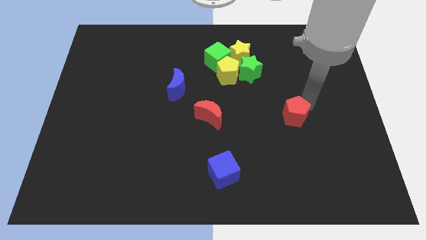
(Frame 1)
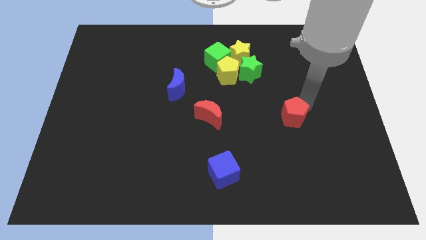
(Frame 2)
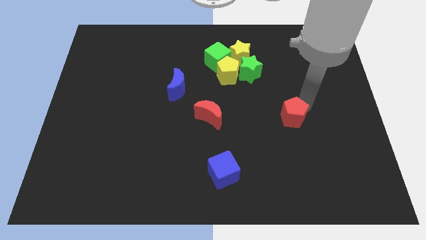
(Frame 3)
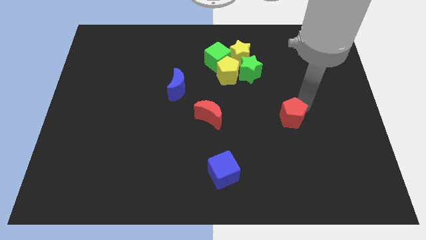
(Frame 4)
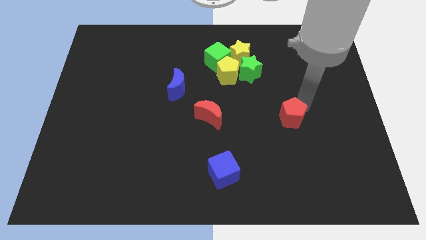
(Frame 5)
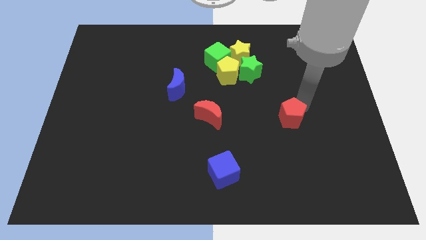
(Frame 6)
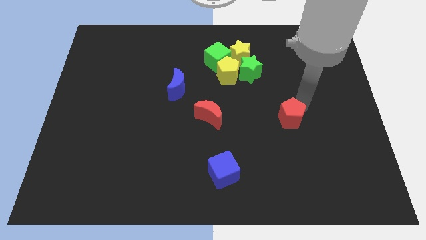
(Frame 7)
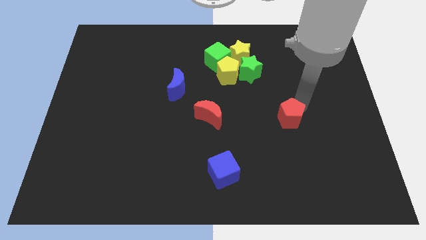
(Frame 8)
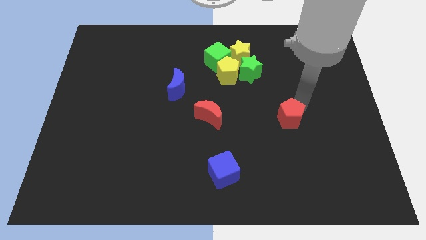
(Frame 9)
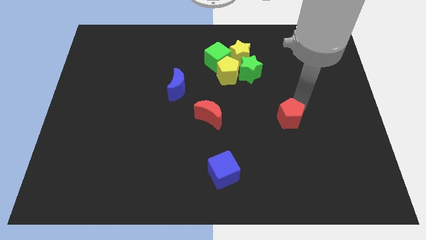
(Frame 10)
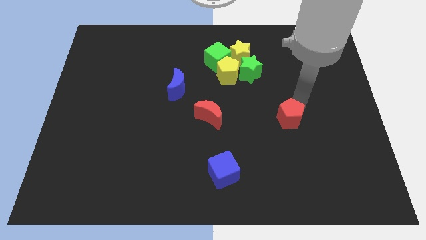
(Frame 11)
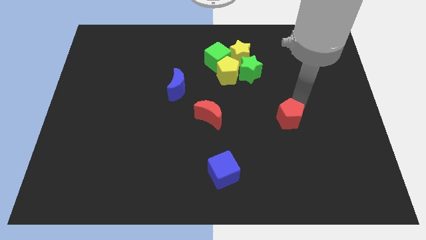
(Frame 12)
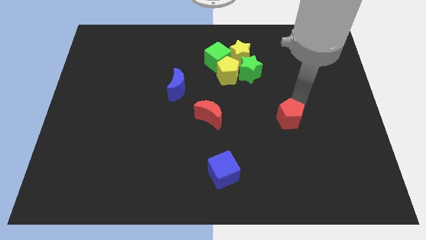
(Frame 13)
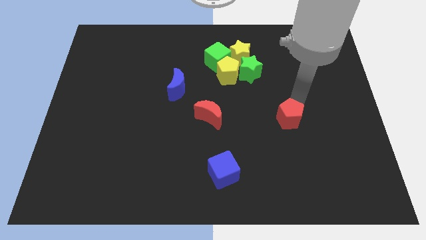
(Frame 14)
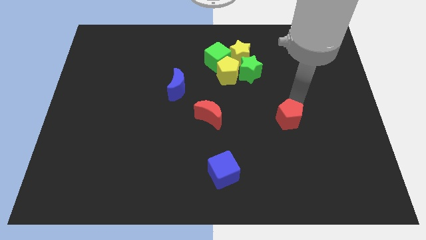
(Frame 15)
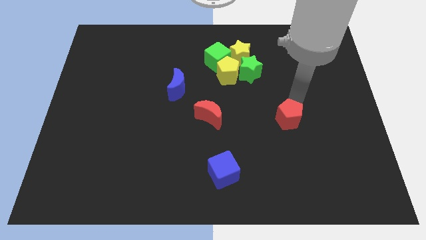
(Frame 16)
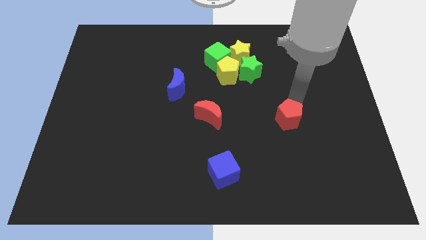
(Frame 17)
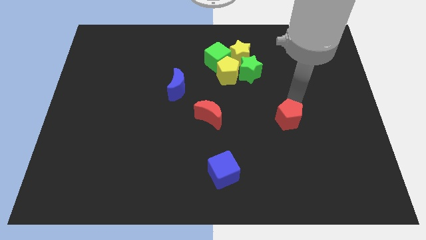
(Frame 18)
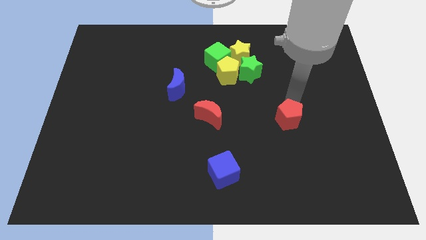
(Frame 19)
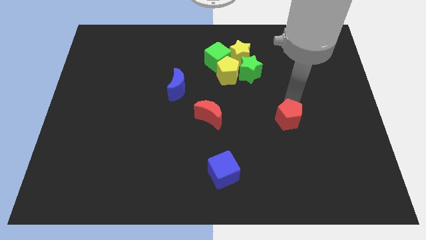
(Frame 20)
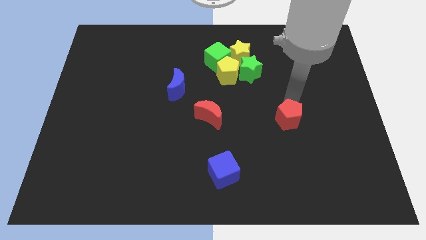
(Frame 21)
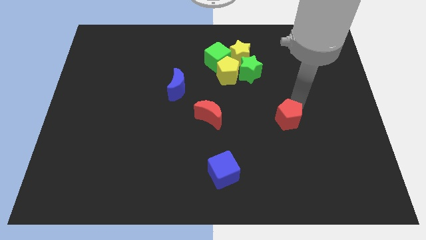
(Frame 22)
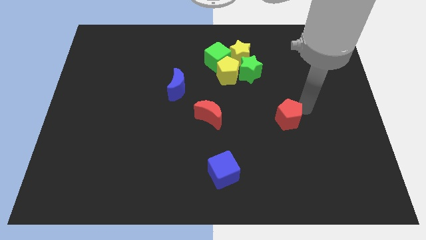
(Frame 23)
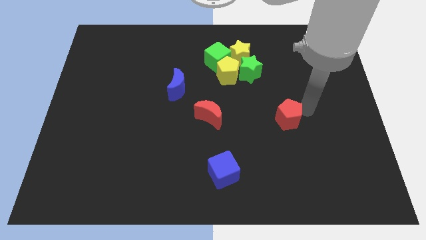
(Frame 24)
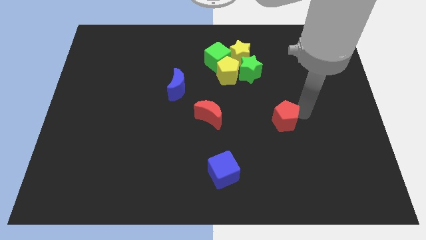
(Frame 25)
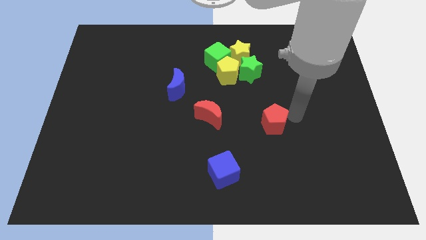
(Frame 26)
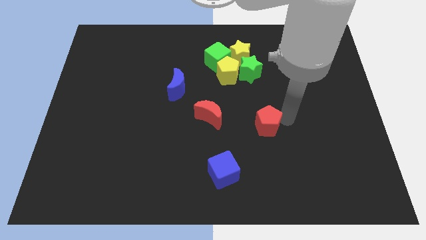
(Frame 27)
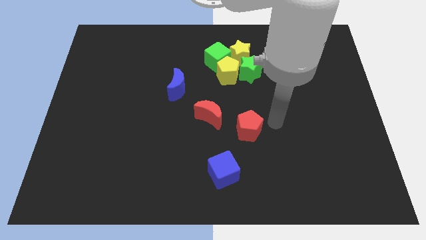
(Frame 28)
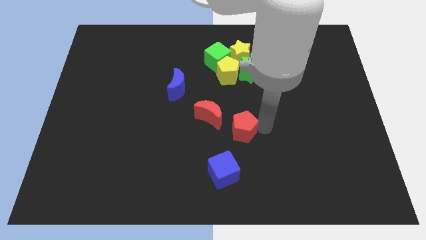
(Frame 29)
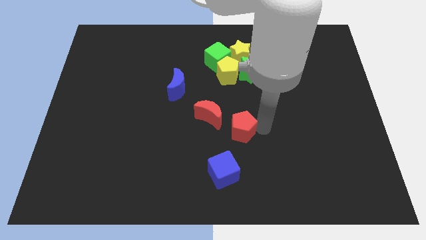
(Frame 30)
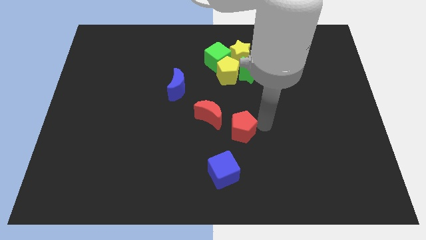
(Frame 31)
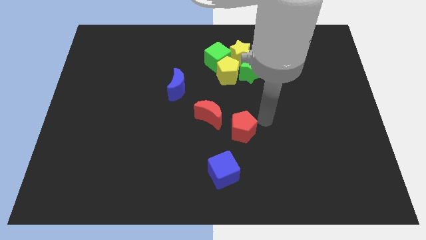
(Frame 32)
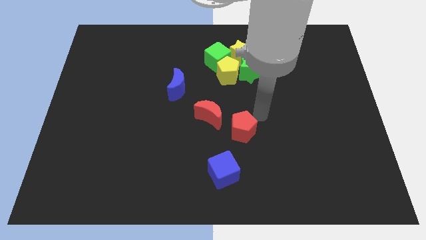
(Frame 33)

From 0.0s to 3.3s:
push the red pentagon to the center of the board

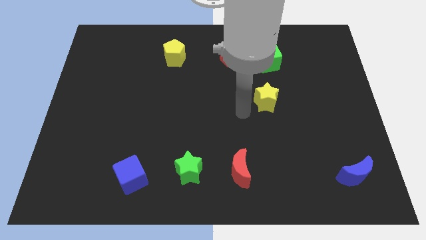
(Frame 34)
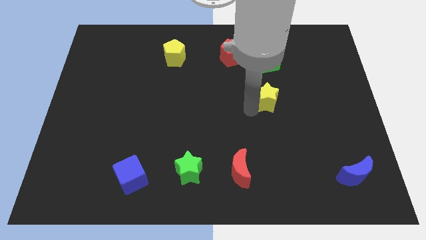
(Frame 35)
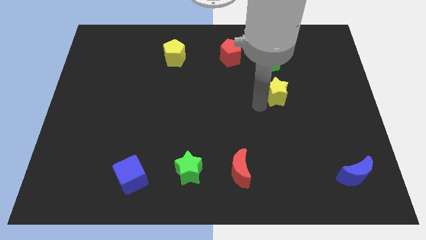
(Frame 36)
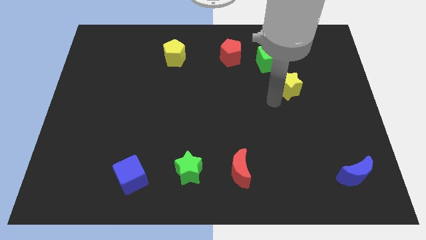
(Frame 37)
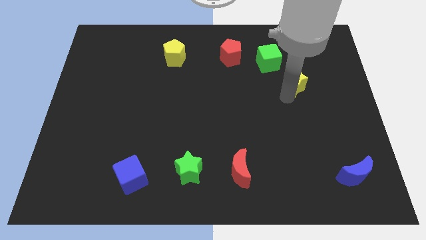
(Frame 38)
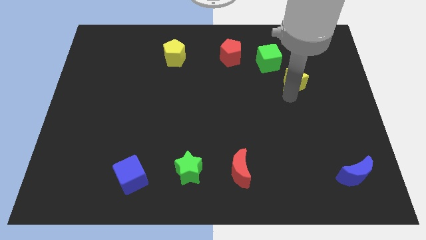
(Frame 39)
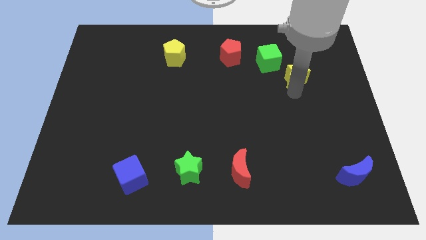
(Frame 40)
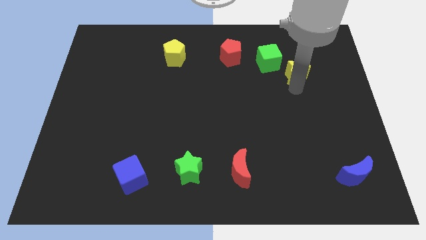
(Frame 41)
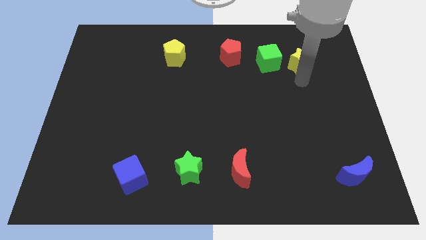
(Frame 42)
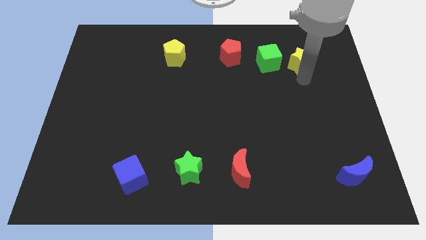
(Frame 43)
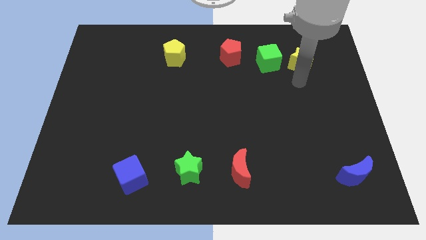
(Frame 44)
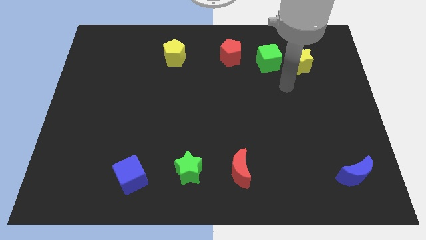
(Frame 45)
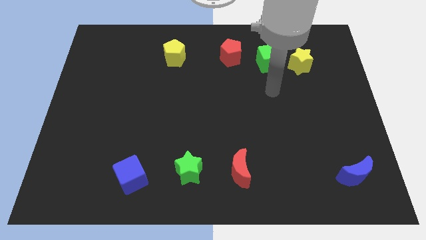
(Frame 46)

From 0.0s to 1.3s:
place the yellow star right to the green cube

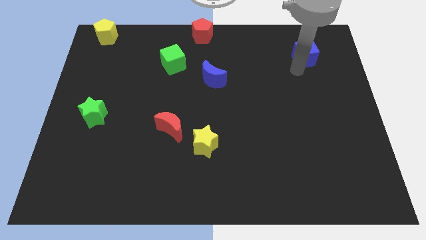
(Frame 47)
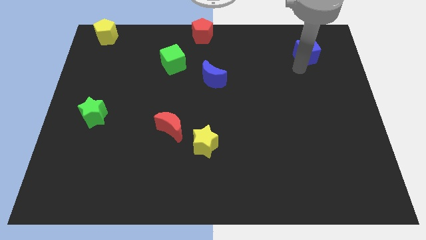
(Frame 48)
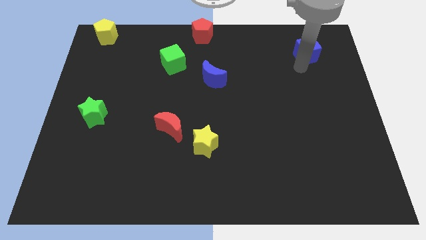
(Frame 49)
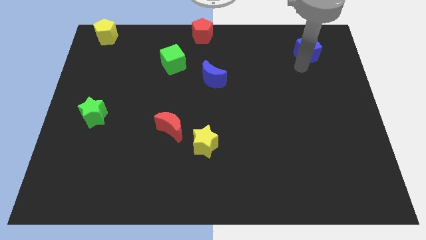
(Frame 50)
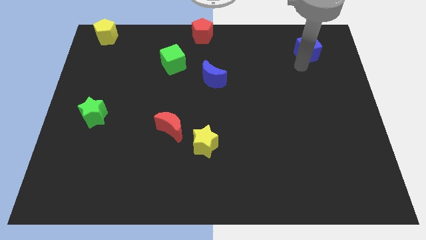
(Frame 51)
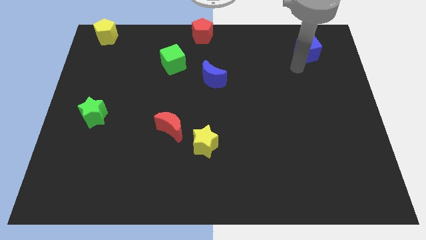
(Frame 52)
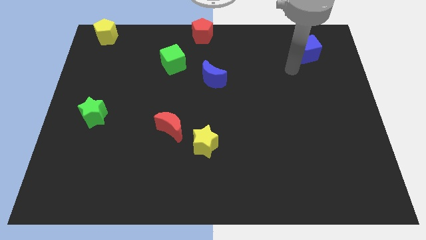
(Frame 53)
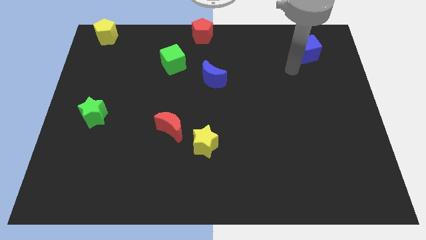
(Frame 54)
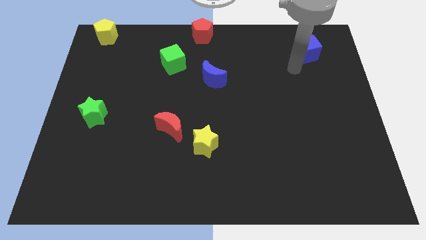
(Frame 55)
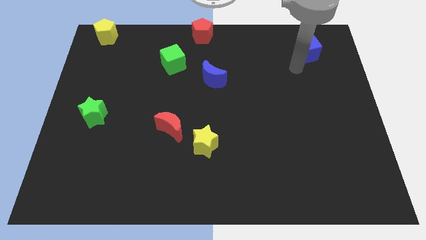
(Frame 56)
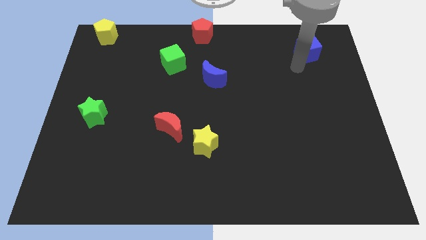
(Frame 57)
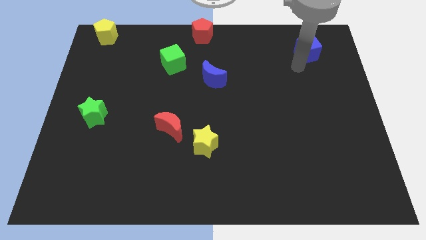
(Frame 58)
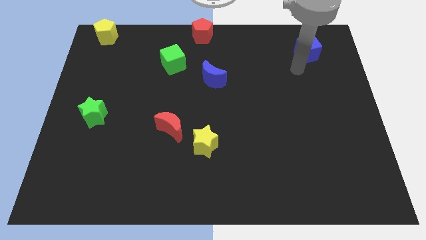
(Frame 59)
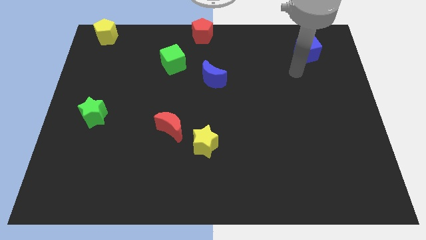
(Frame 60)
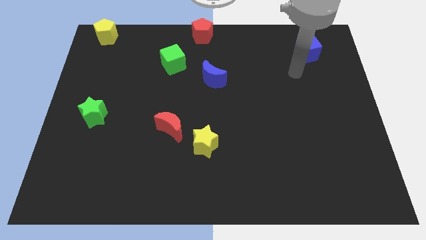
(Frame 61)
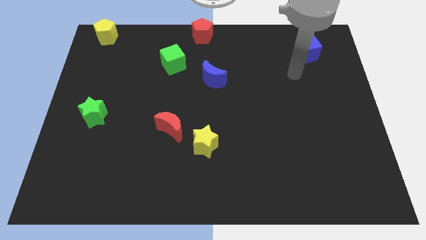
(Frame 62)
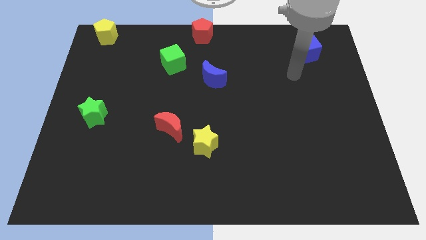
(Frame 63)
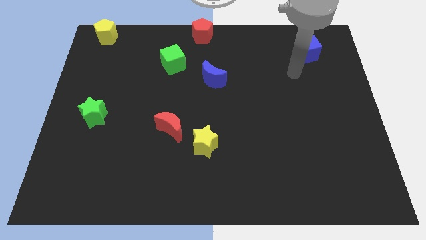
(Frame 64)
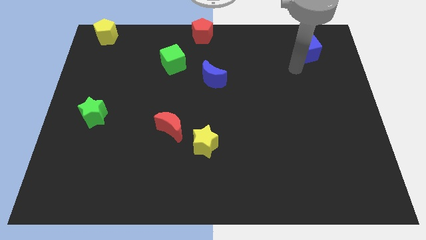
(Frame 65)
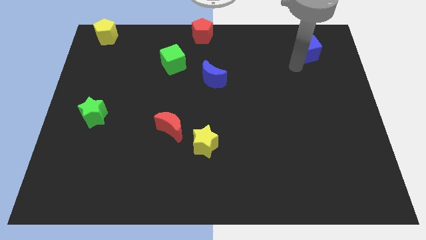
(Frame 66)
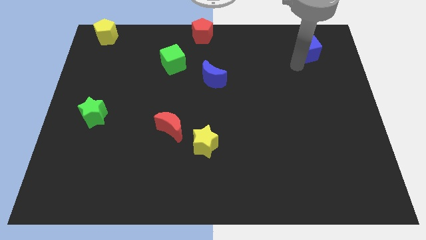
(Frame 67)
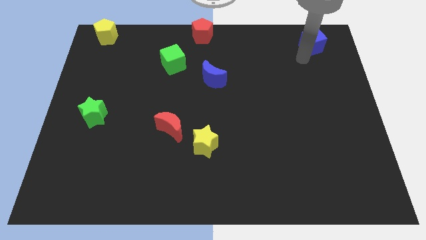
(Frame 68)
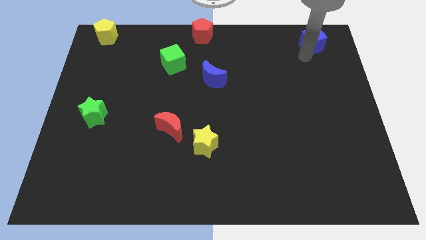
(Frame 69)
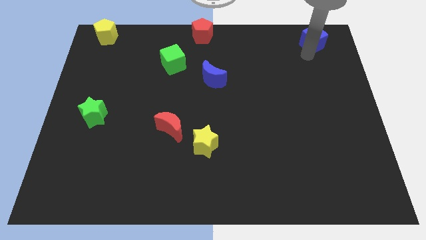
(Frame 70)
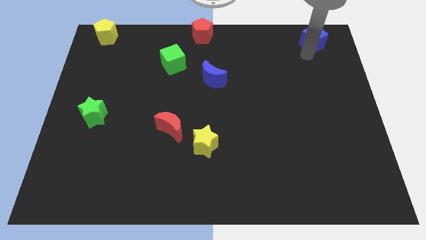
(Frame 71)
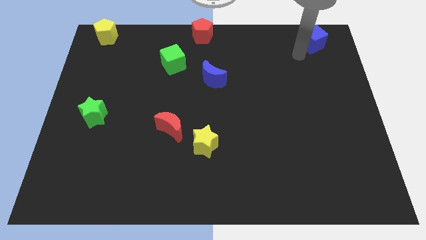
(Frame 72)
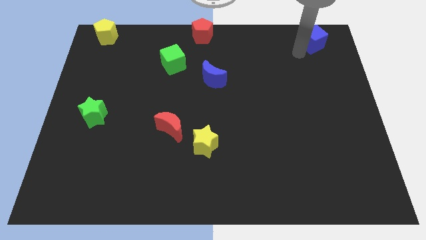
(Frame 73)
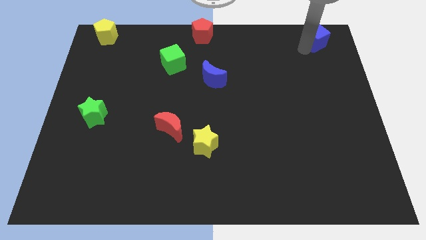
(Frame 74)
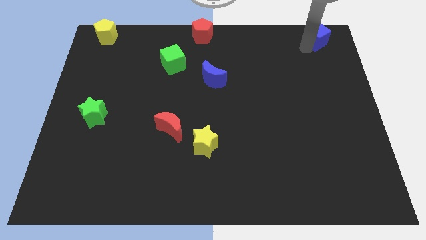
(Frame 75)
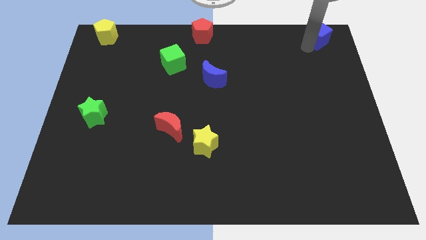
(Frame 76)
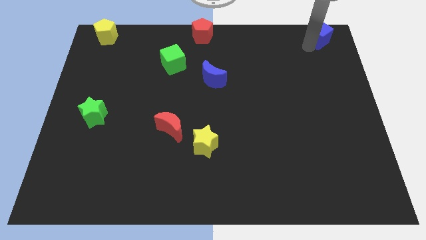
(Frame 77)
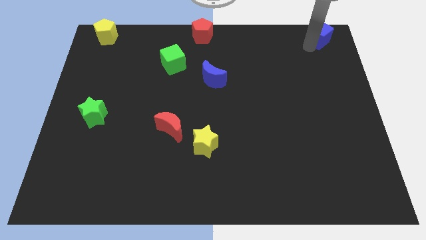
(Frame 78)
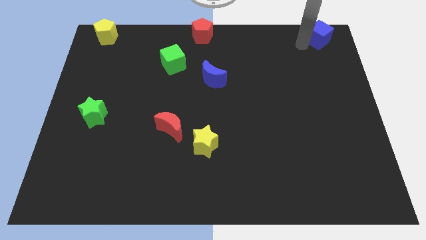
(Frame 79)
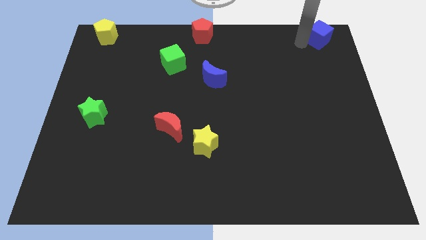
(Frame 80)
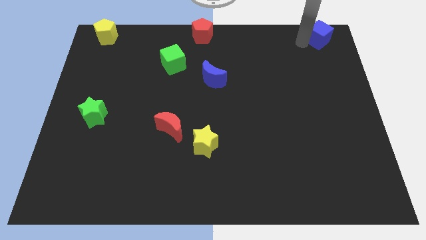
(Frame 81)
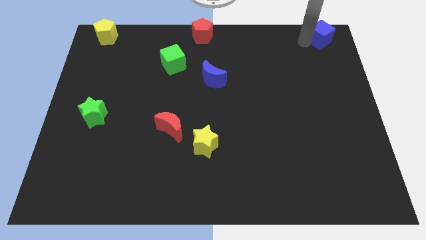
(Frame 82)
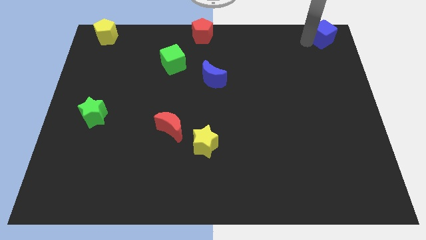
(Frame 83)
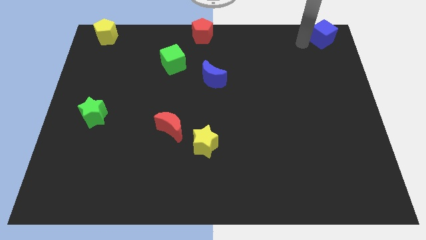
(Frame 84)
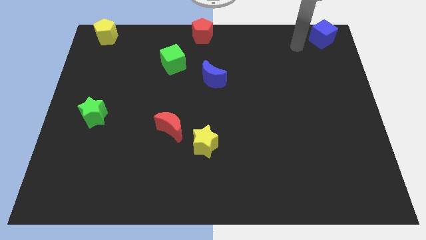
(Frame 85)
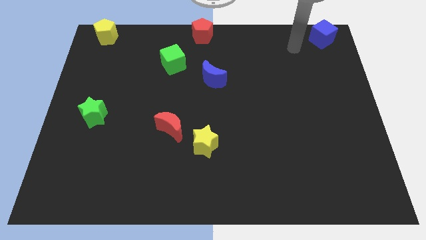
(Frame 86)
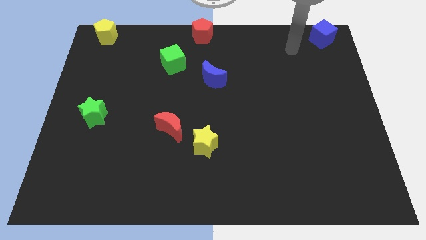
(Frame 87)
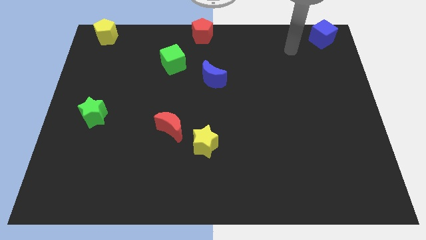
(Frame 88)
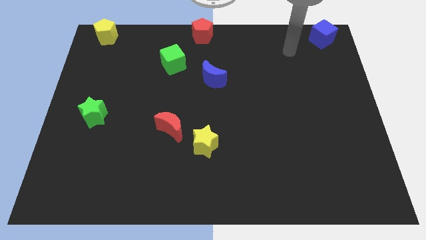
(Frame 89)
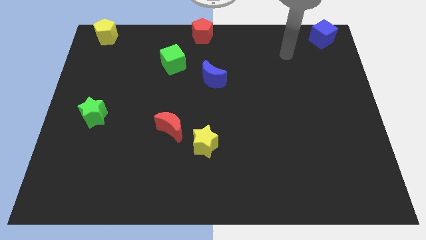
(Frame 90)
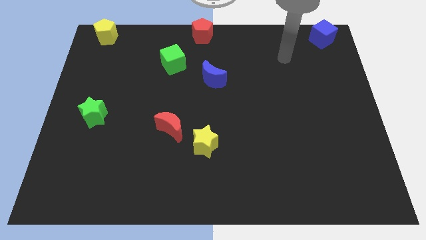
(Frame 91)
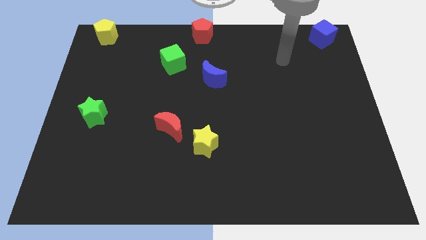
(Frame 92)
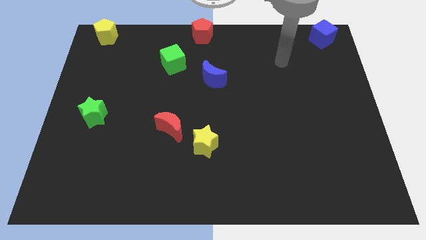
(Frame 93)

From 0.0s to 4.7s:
place the blue cube to the top right corner of the board
